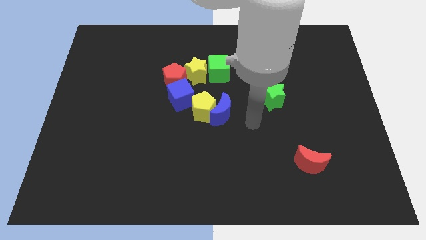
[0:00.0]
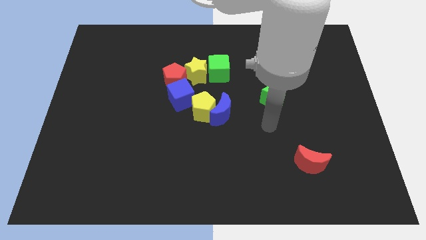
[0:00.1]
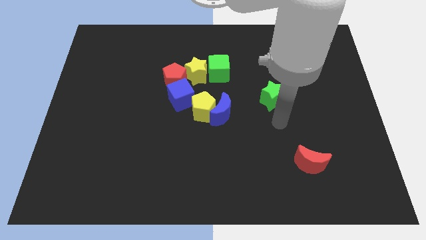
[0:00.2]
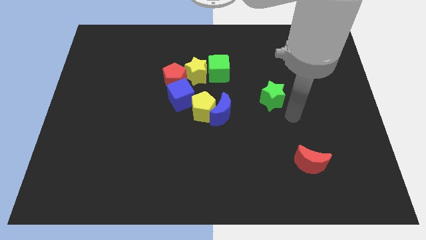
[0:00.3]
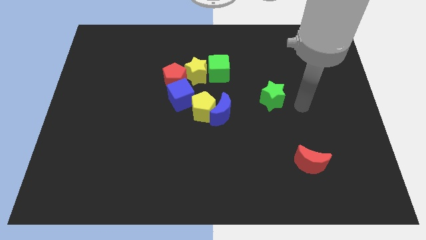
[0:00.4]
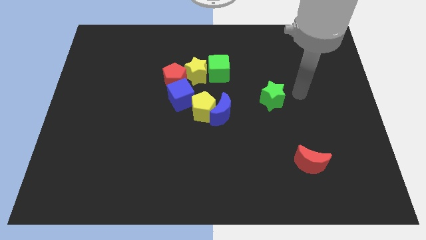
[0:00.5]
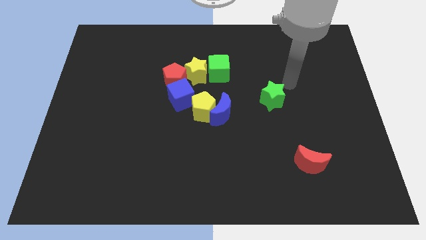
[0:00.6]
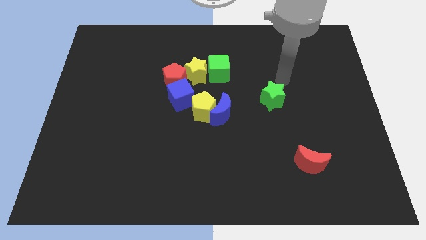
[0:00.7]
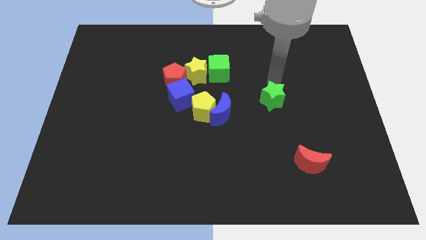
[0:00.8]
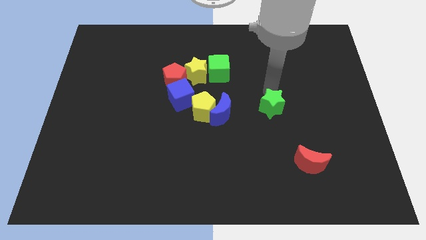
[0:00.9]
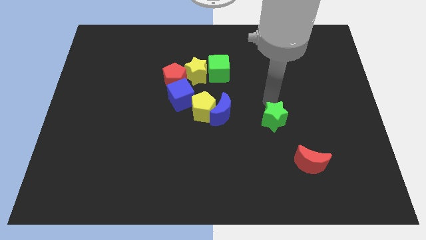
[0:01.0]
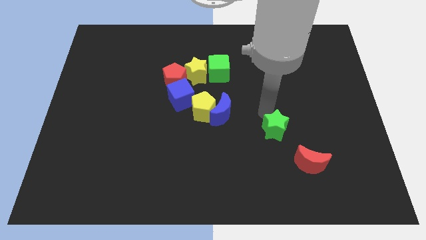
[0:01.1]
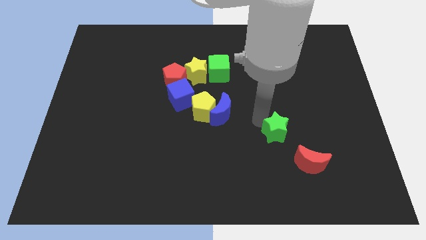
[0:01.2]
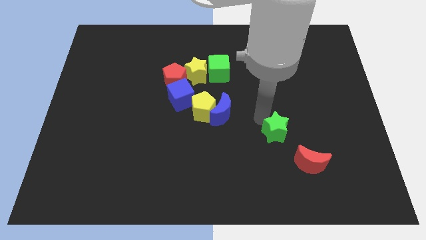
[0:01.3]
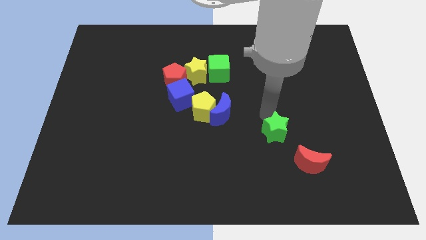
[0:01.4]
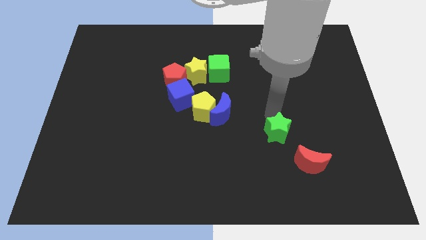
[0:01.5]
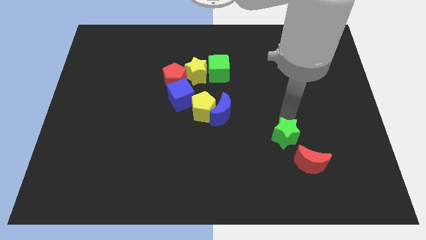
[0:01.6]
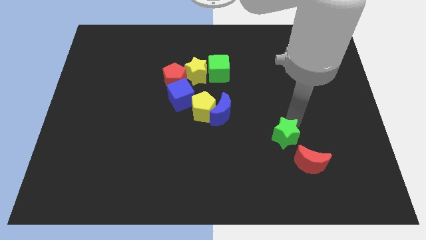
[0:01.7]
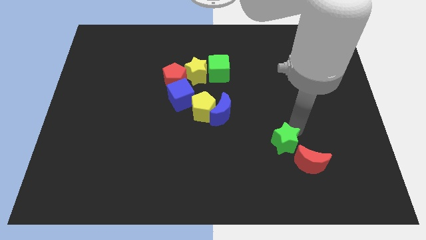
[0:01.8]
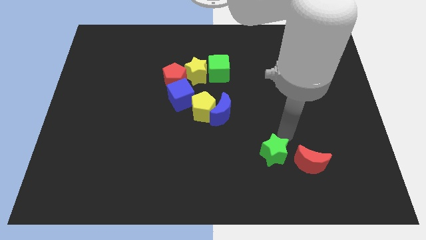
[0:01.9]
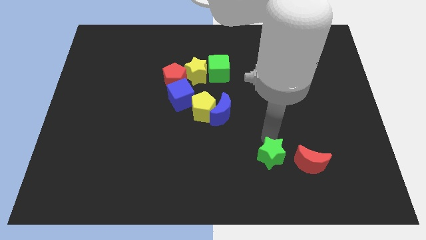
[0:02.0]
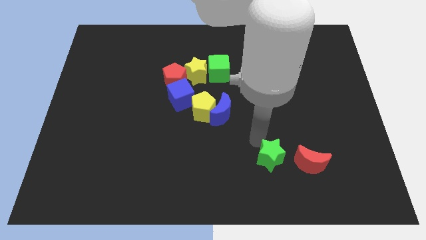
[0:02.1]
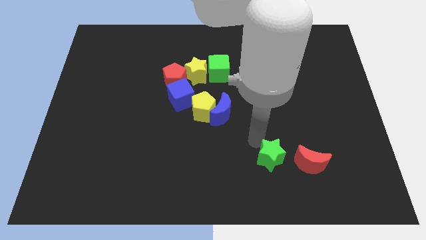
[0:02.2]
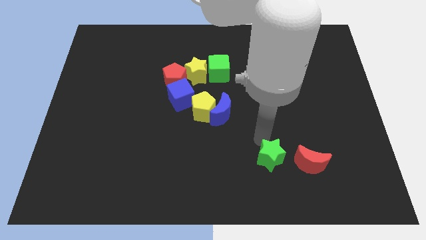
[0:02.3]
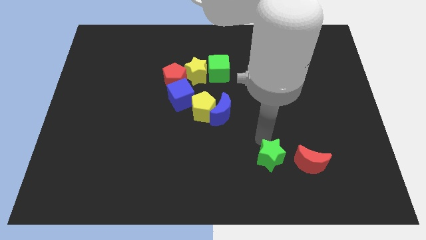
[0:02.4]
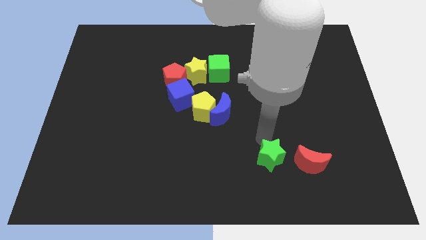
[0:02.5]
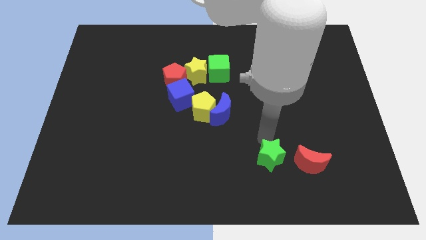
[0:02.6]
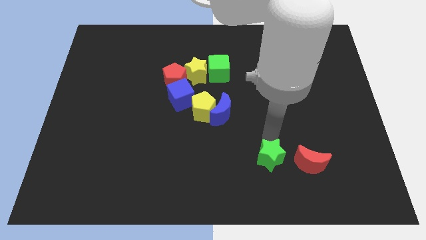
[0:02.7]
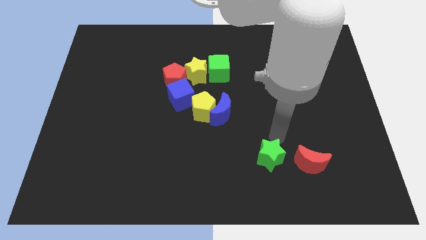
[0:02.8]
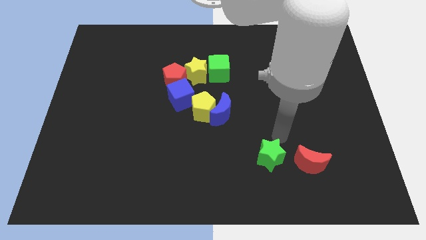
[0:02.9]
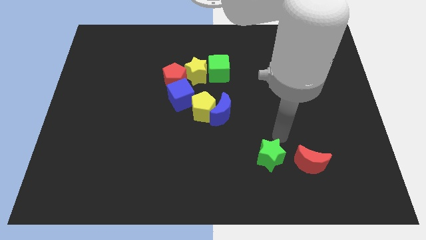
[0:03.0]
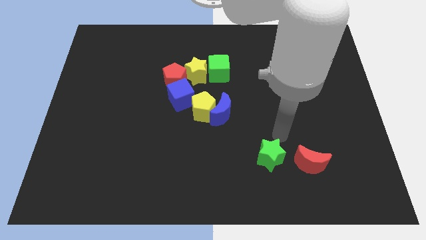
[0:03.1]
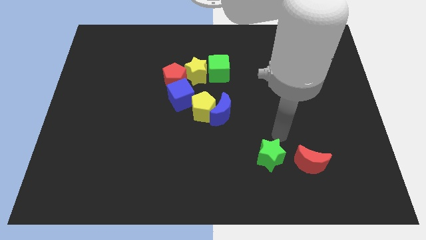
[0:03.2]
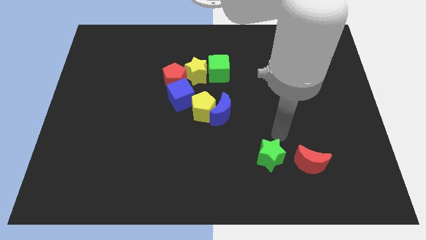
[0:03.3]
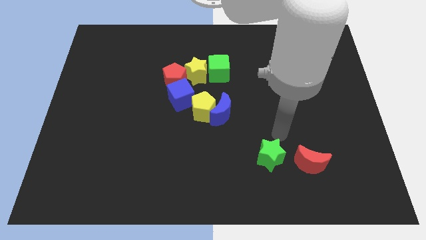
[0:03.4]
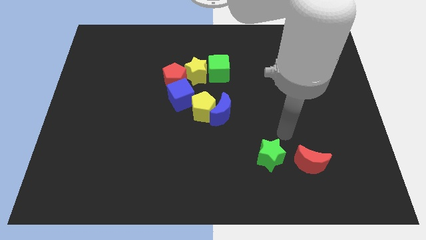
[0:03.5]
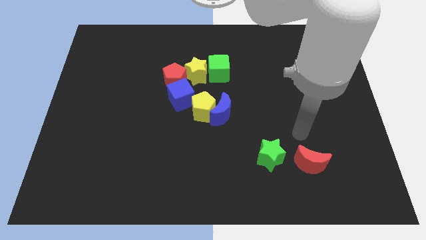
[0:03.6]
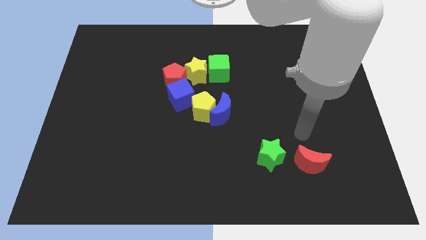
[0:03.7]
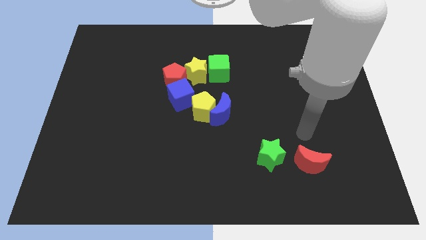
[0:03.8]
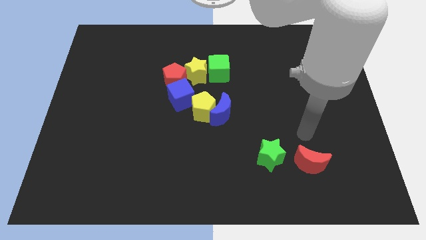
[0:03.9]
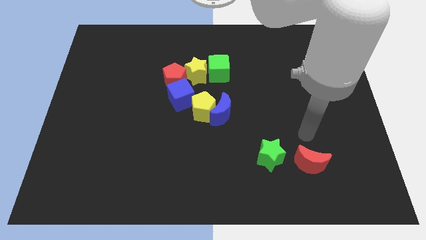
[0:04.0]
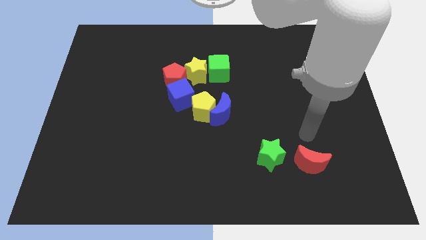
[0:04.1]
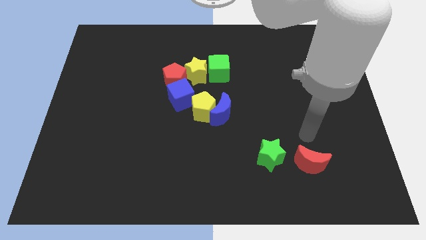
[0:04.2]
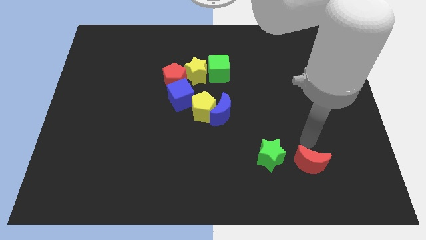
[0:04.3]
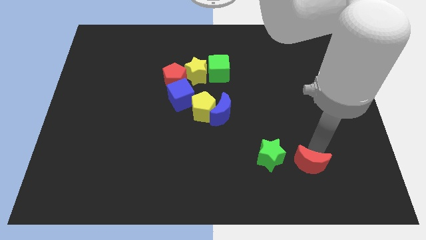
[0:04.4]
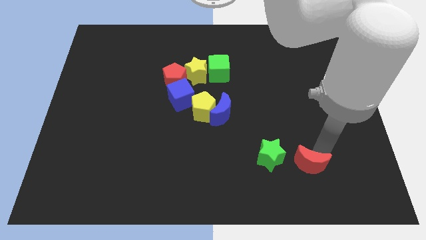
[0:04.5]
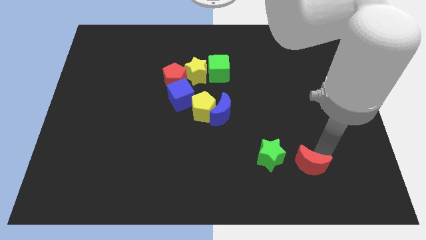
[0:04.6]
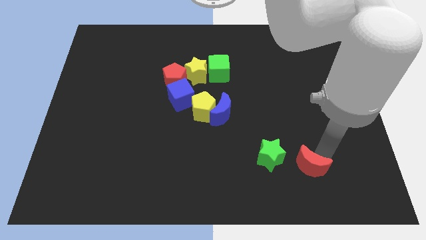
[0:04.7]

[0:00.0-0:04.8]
push the green star parallel left to the red moon

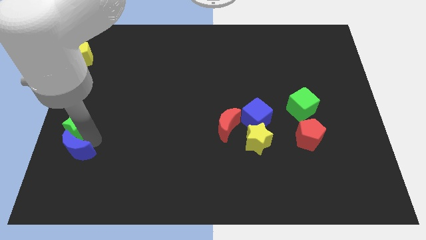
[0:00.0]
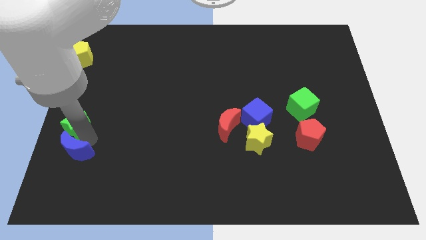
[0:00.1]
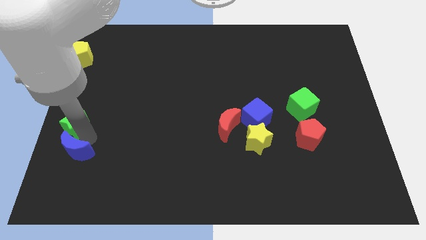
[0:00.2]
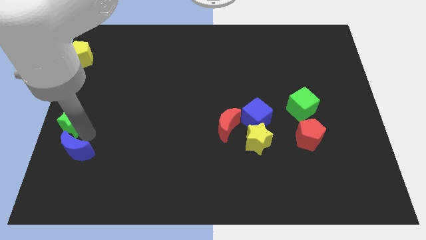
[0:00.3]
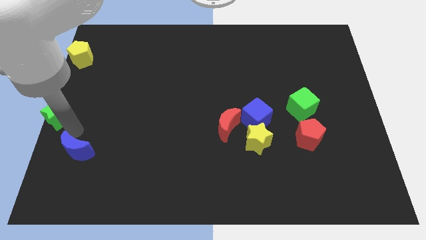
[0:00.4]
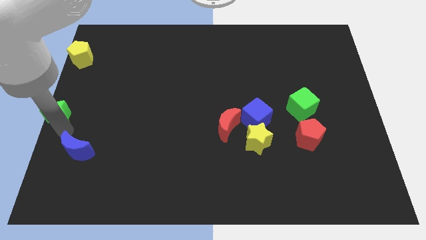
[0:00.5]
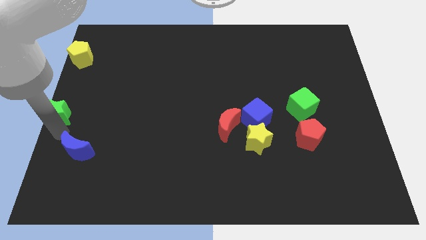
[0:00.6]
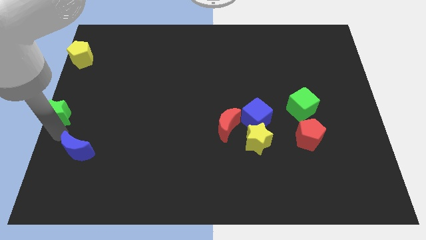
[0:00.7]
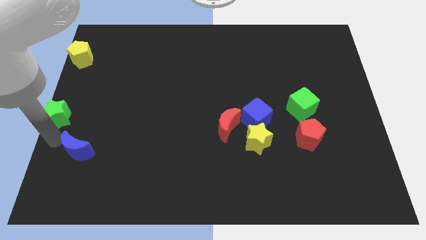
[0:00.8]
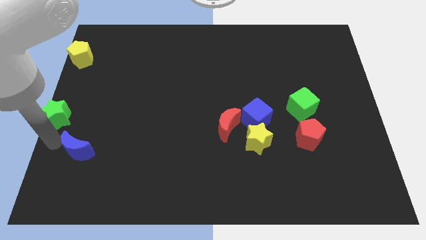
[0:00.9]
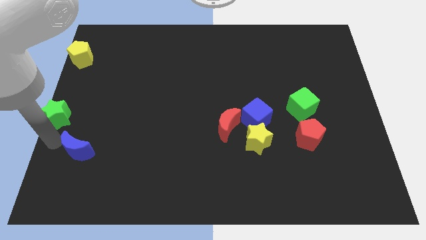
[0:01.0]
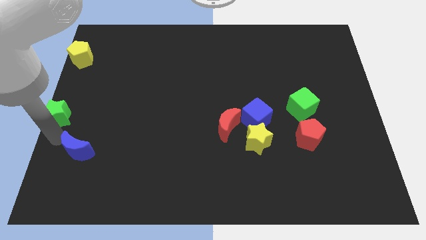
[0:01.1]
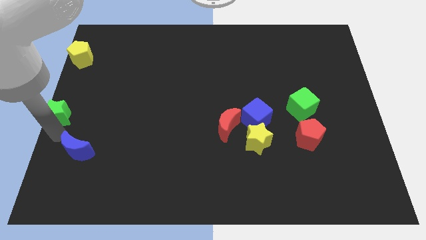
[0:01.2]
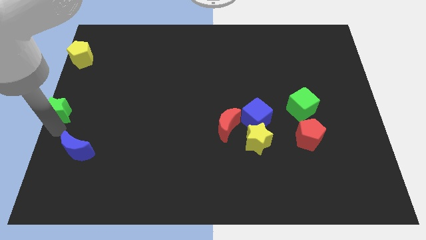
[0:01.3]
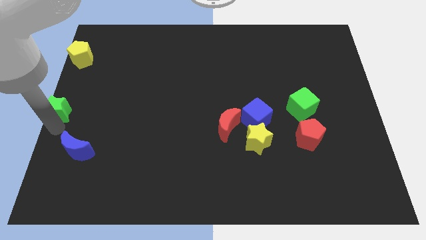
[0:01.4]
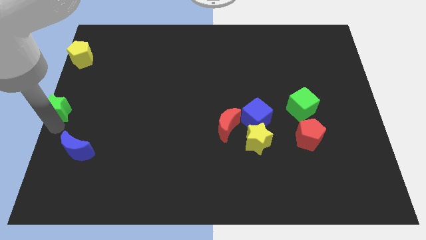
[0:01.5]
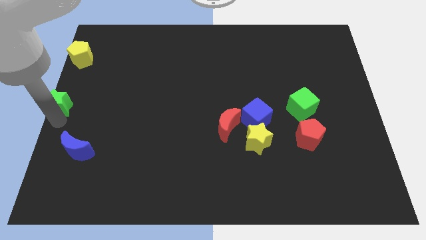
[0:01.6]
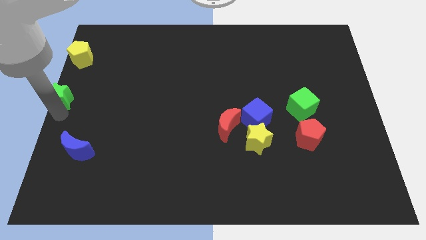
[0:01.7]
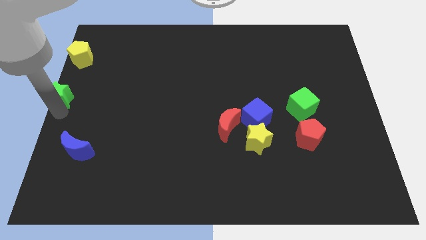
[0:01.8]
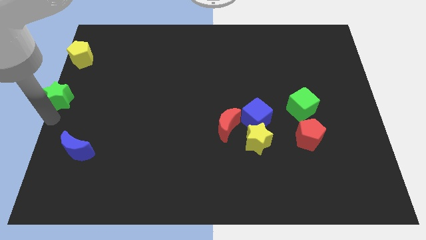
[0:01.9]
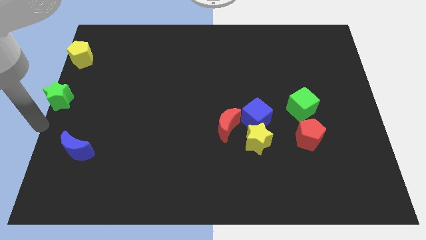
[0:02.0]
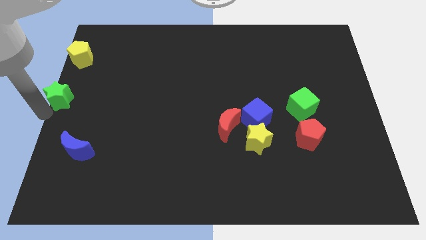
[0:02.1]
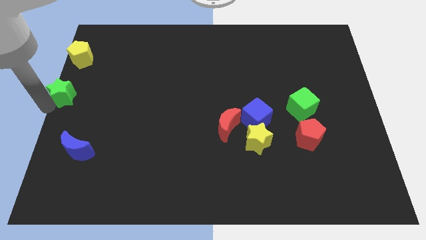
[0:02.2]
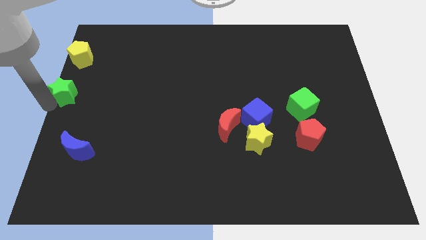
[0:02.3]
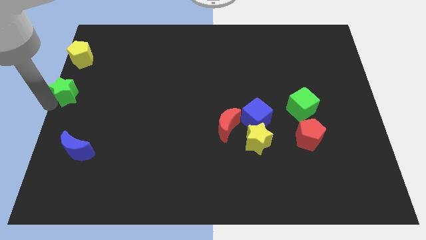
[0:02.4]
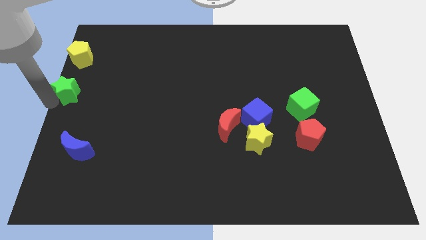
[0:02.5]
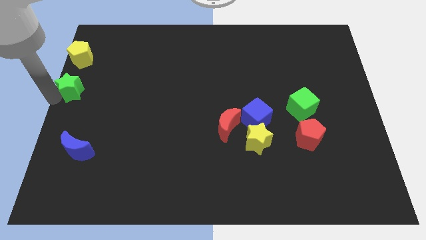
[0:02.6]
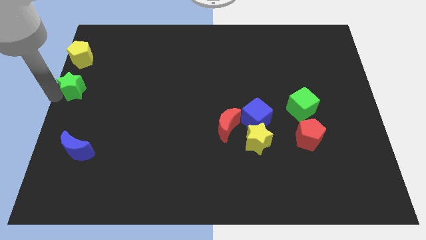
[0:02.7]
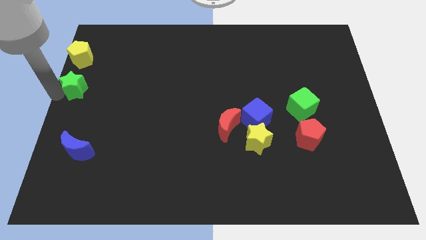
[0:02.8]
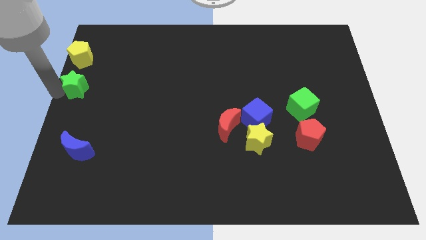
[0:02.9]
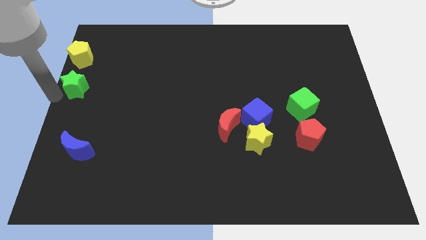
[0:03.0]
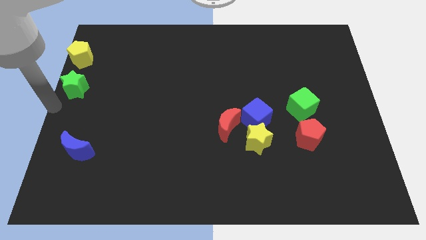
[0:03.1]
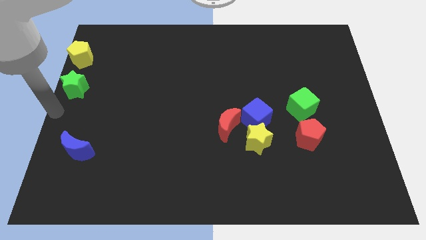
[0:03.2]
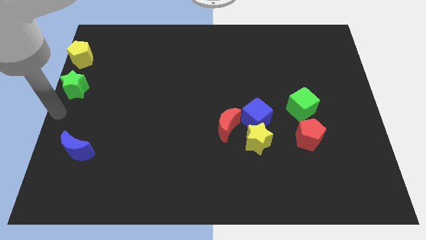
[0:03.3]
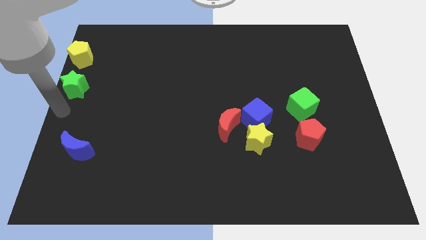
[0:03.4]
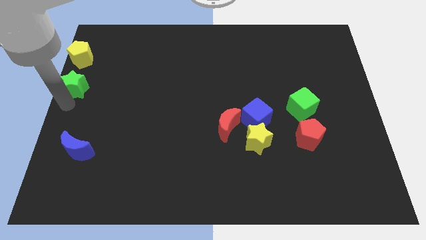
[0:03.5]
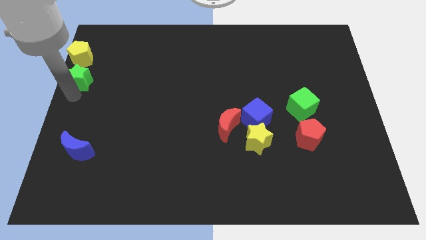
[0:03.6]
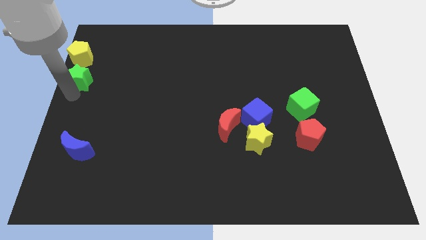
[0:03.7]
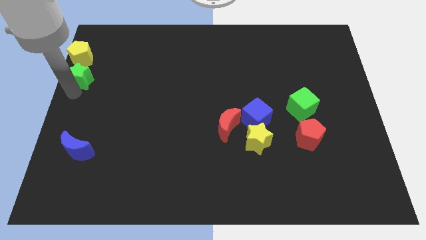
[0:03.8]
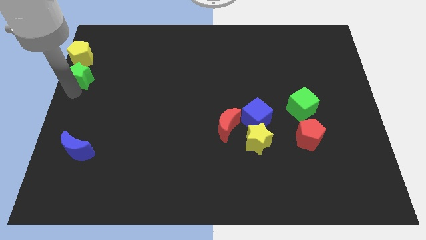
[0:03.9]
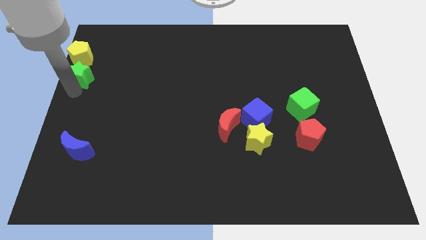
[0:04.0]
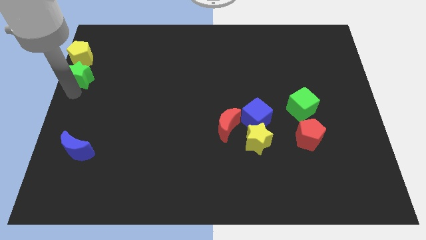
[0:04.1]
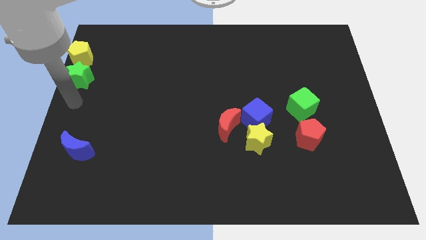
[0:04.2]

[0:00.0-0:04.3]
place the green star below the yellow pentagon
